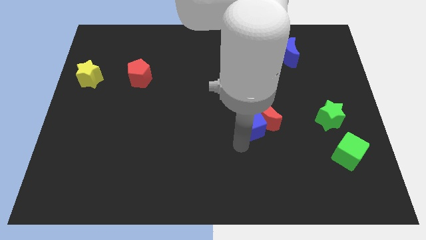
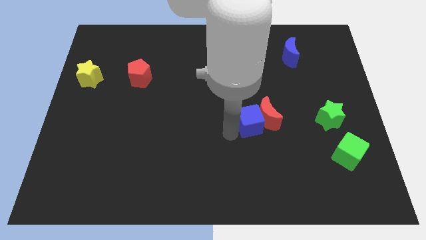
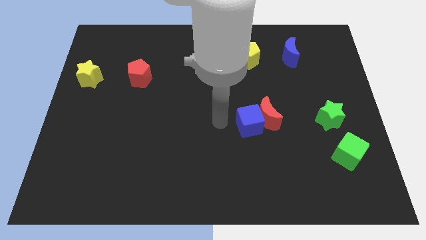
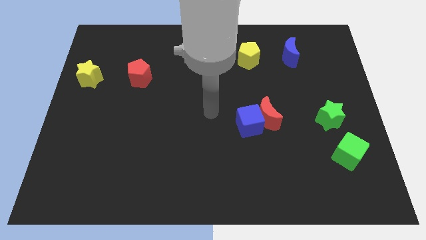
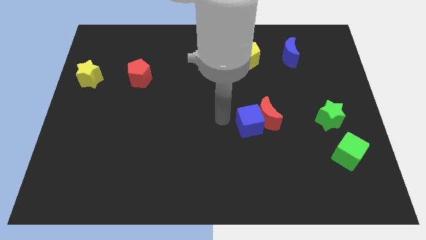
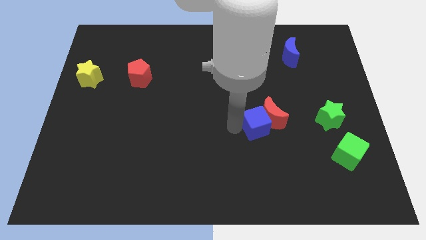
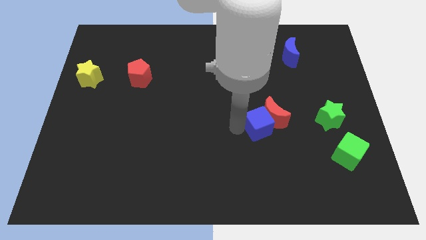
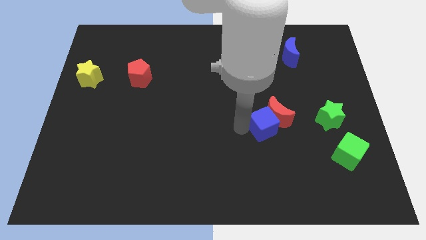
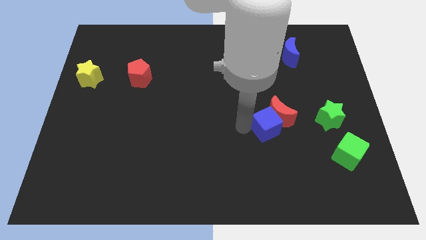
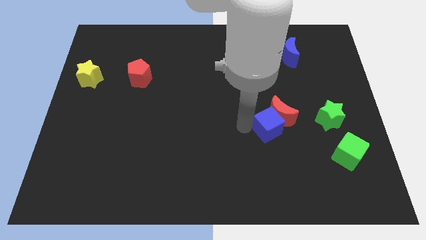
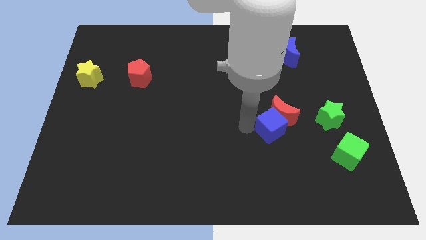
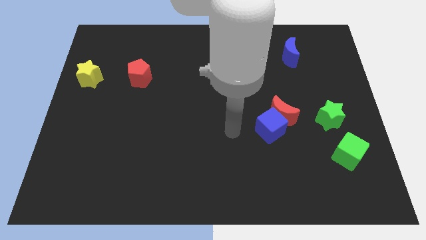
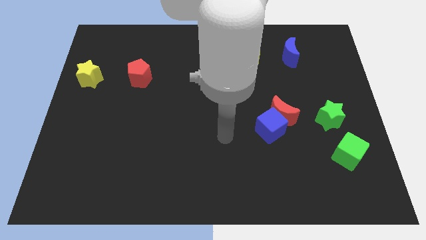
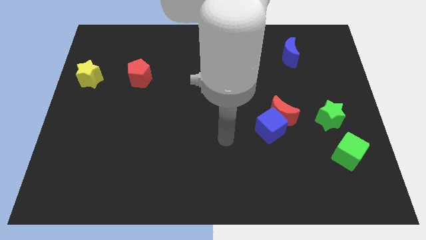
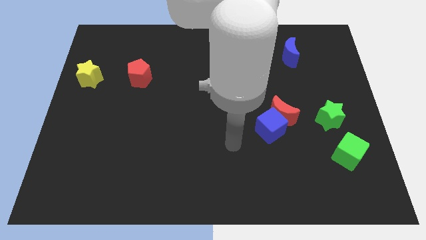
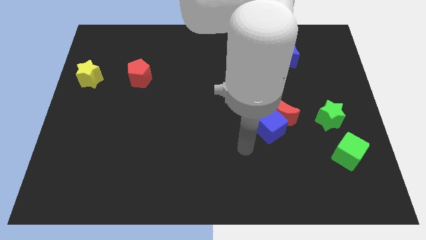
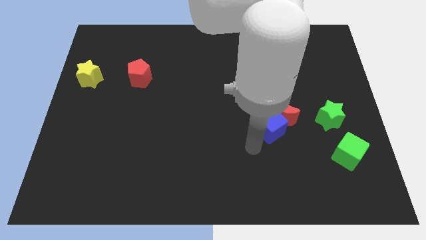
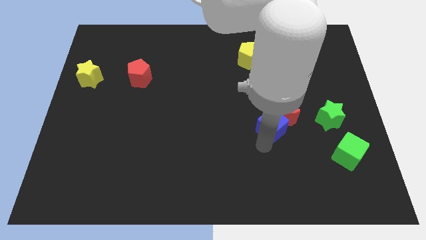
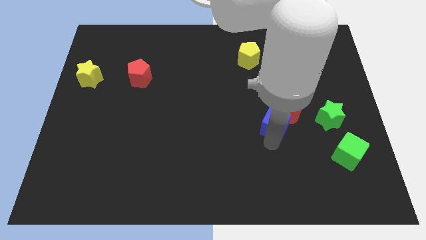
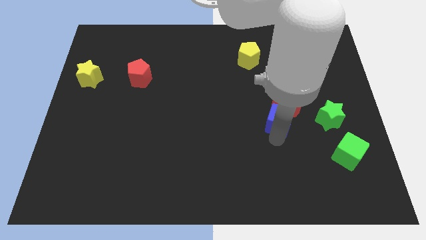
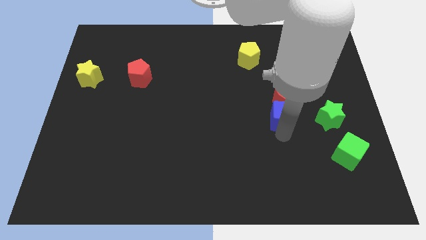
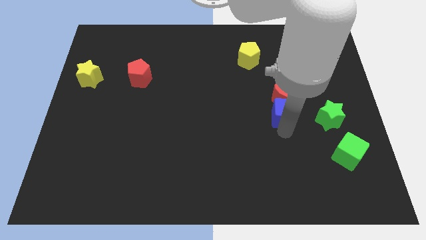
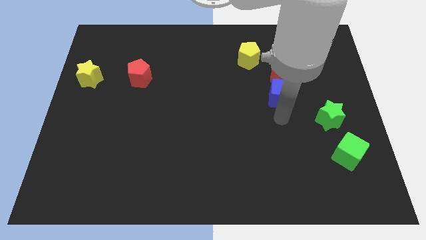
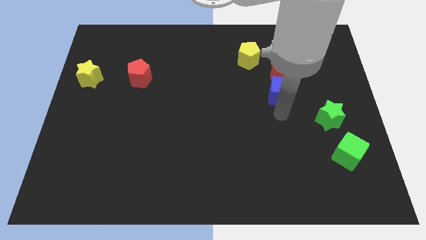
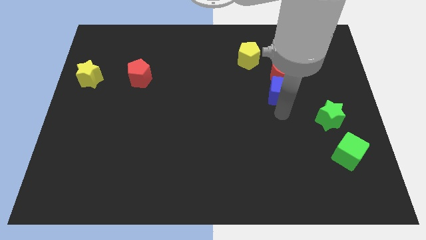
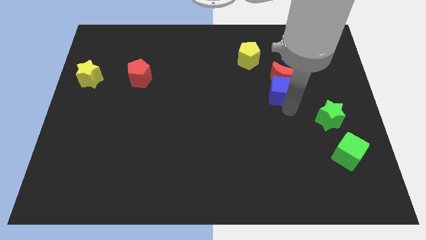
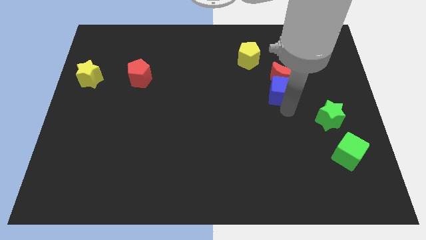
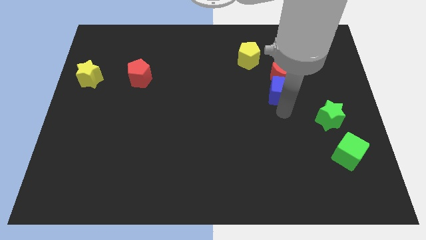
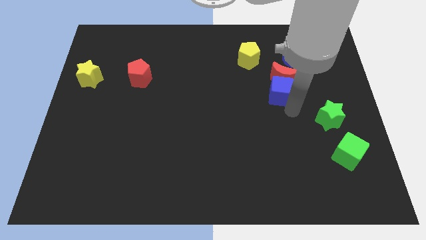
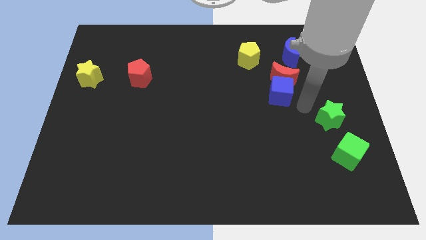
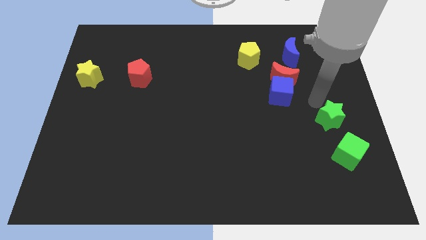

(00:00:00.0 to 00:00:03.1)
place blue cube and red crescent at the bottom of blue crescent to form a line

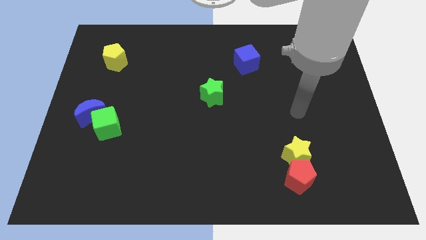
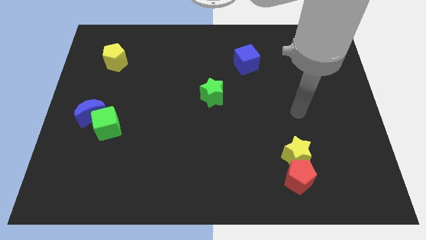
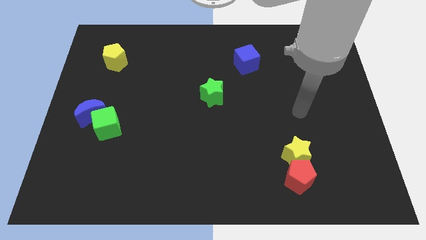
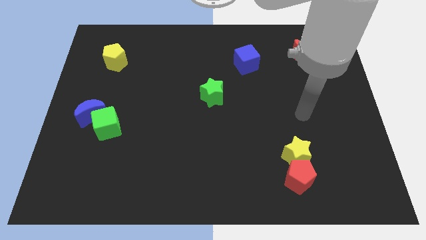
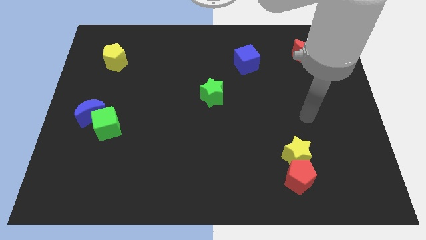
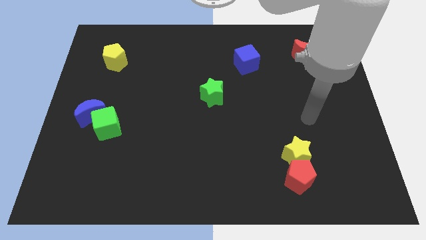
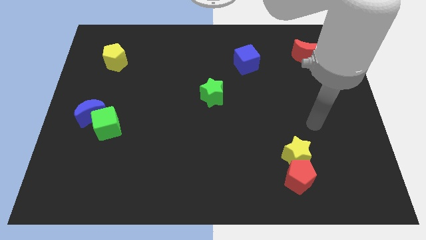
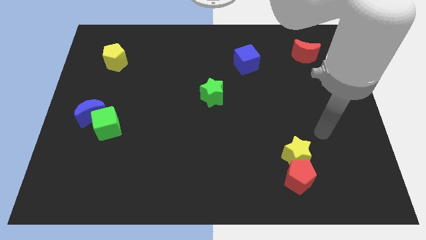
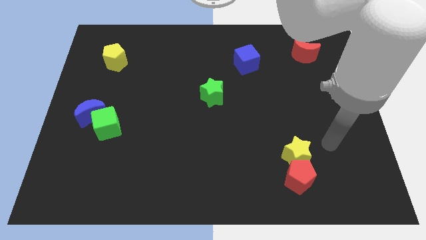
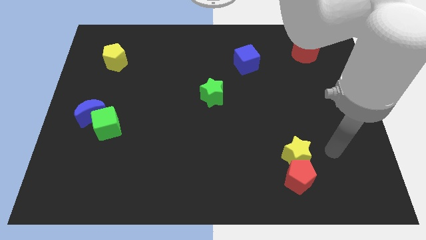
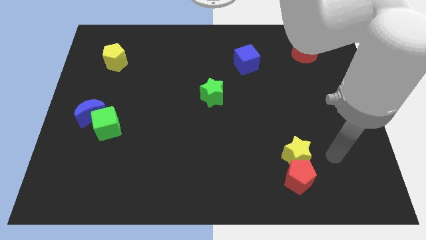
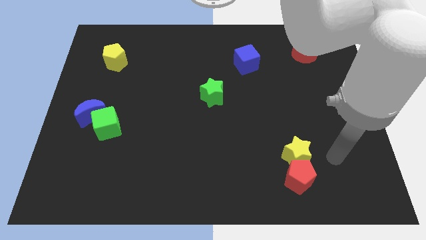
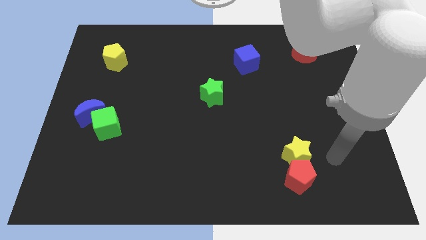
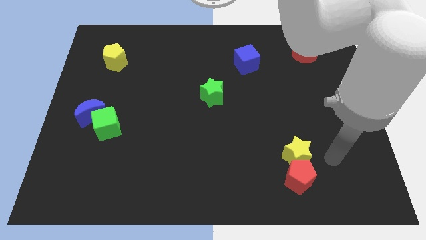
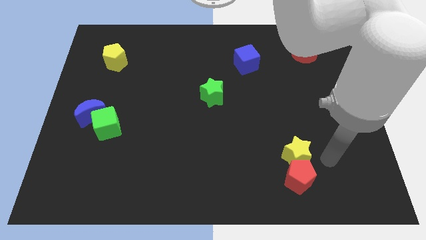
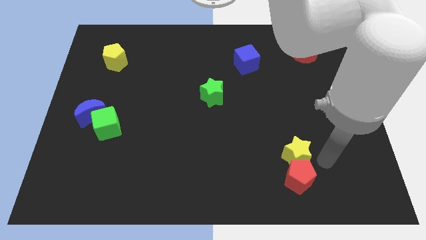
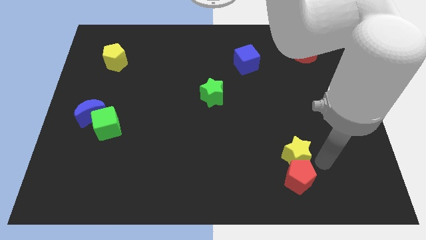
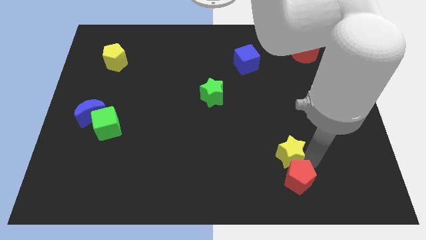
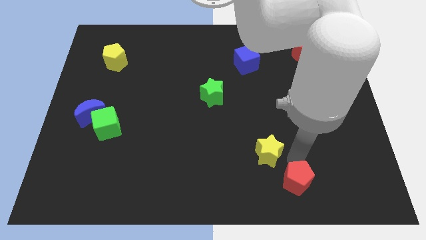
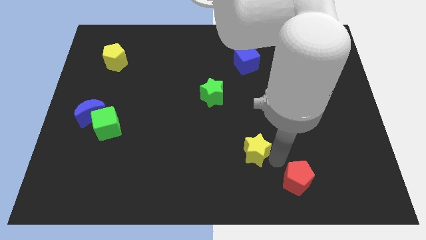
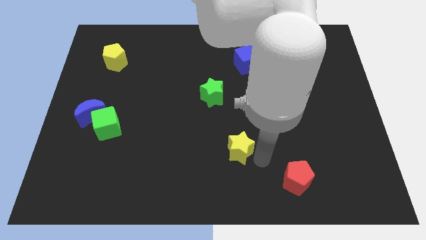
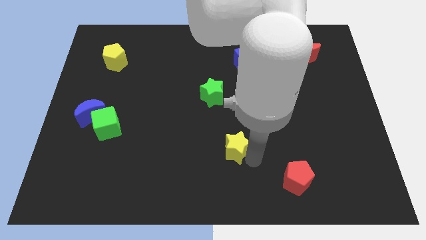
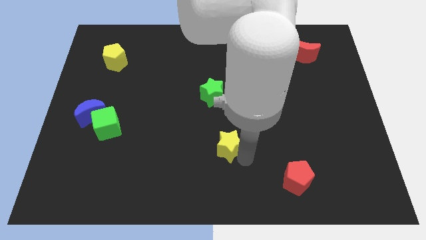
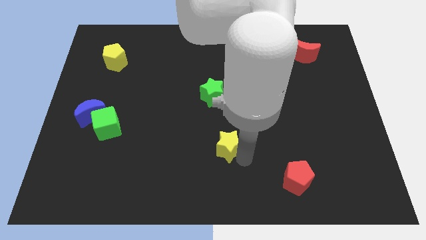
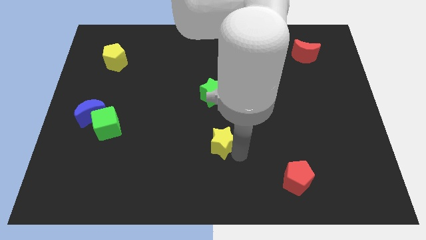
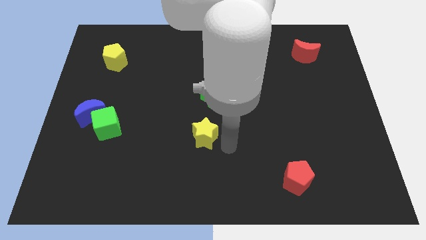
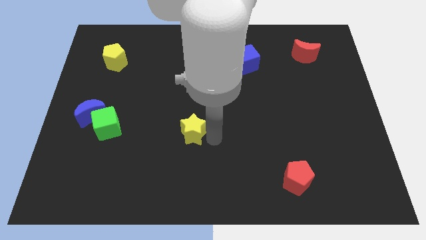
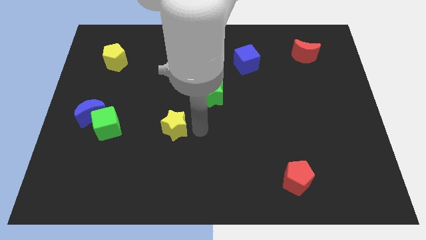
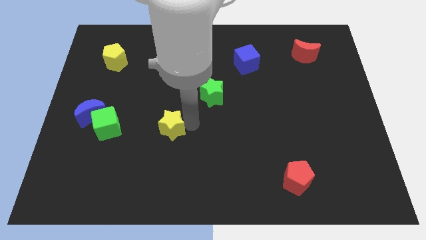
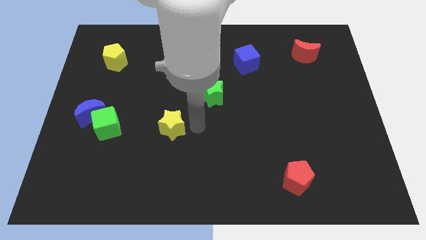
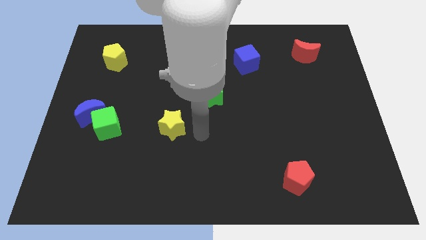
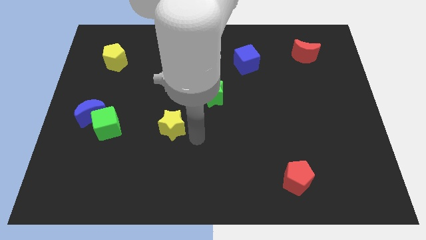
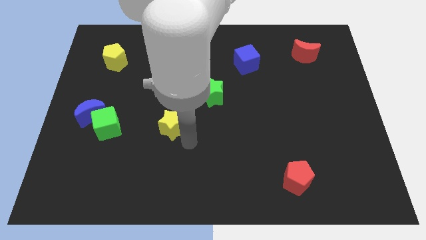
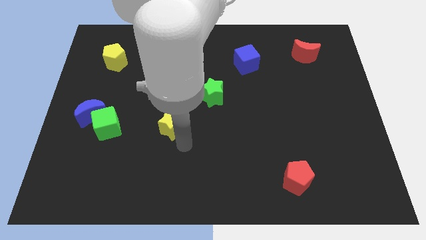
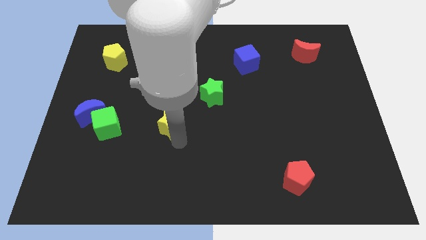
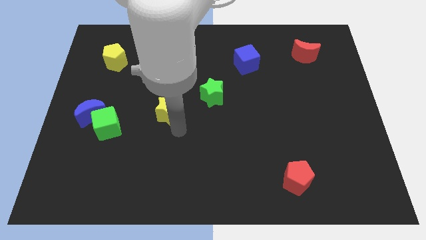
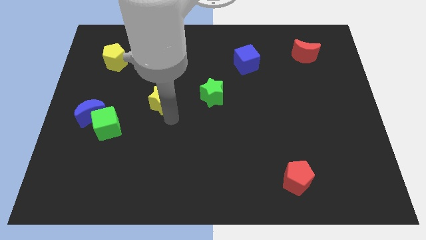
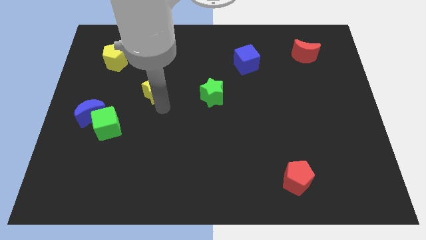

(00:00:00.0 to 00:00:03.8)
place the yellow star left to the green star

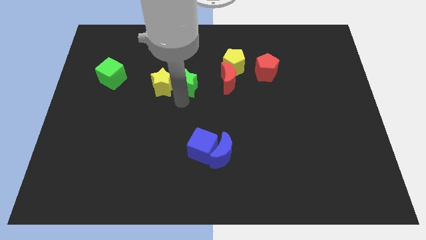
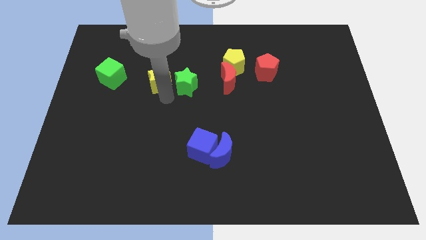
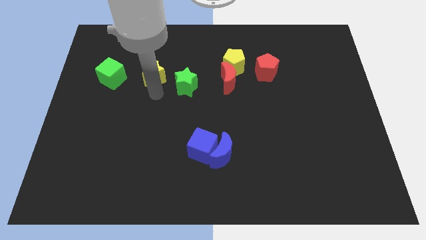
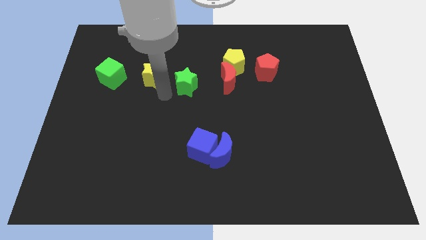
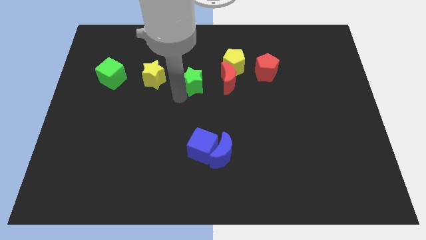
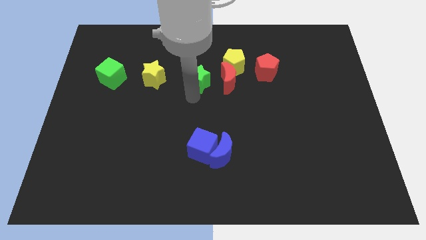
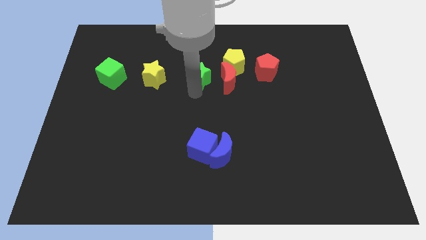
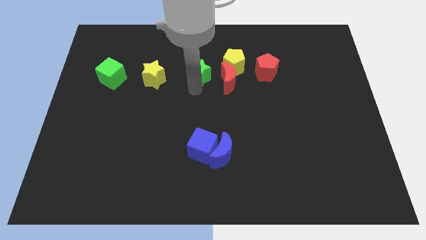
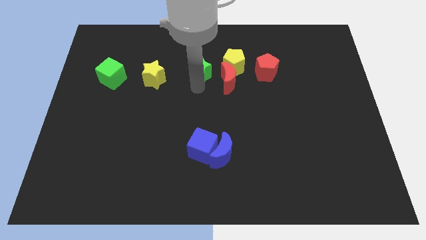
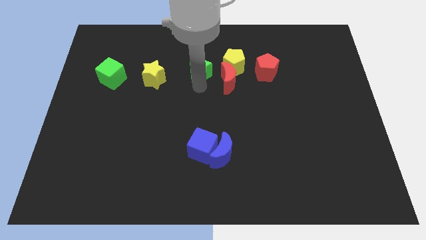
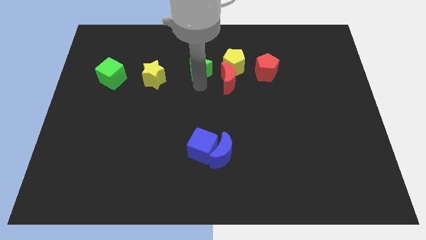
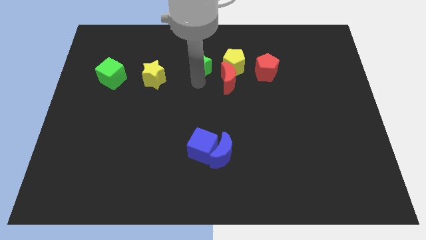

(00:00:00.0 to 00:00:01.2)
separate the yellow star from the green star

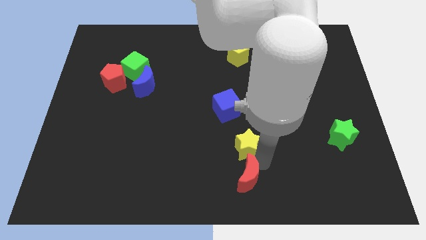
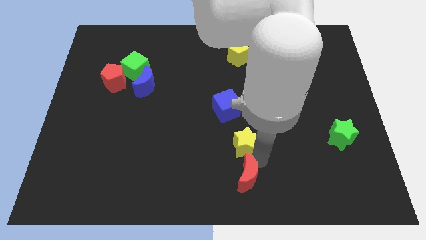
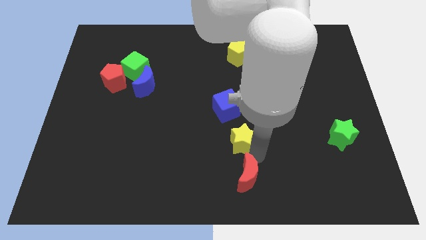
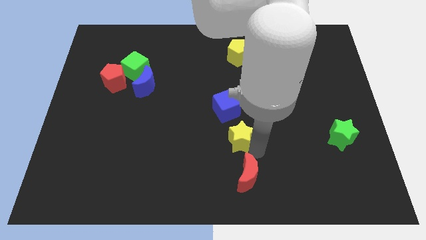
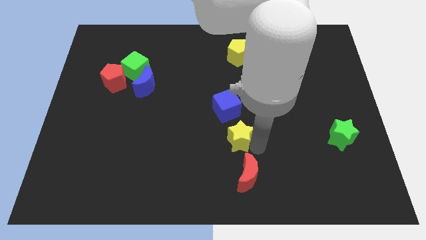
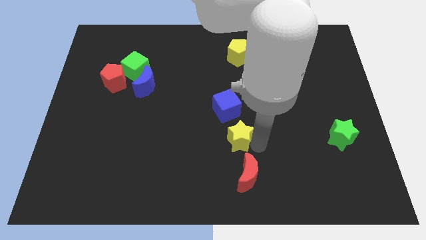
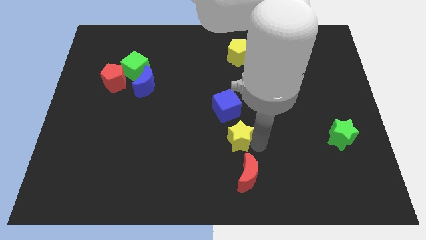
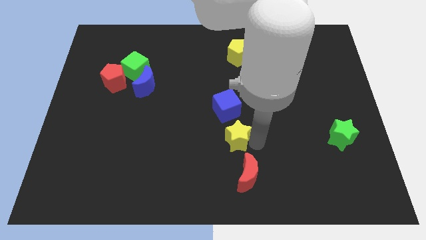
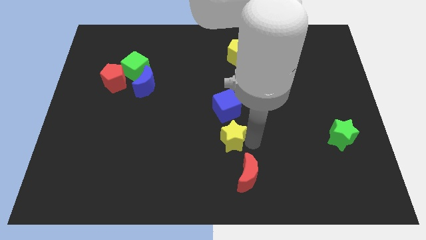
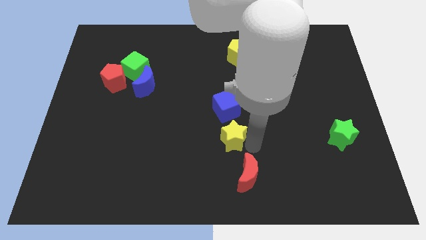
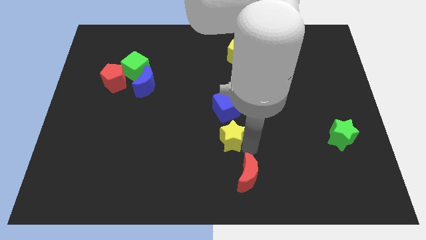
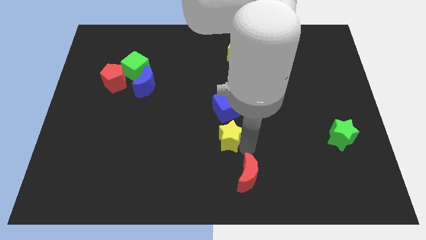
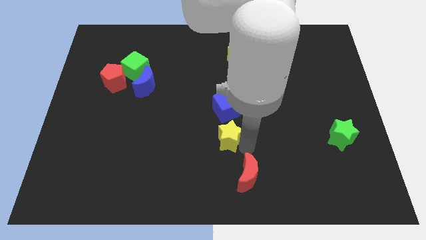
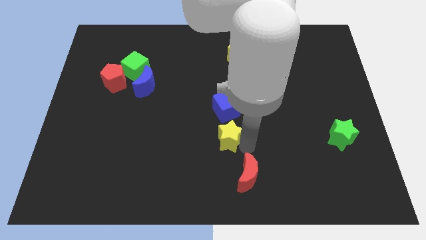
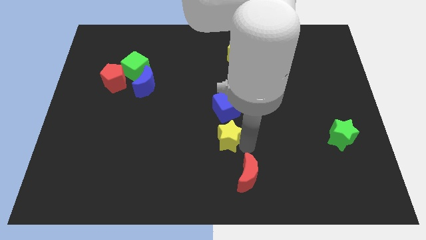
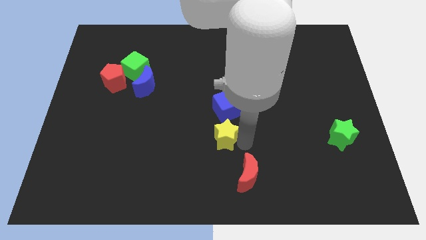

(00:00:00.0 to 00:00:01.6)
drag the yellow star slightly to the left
